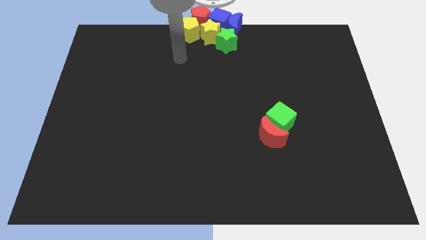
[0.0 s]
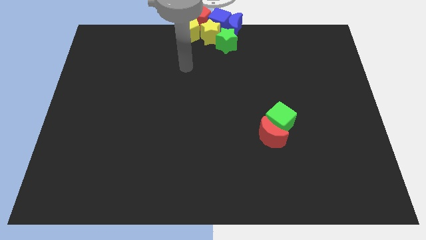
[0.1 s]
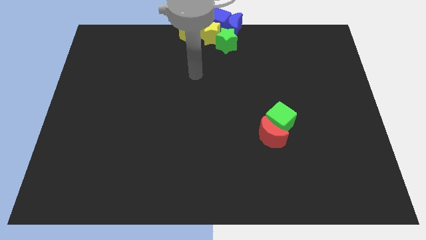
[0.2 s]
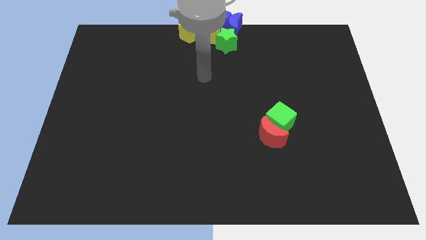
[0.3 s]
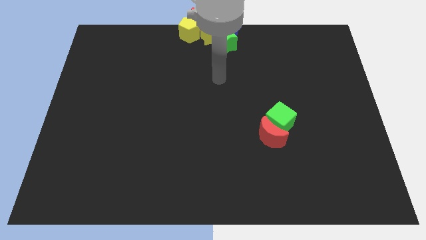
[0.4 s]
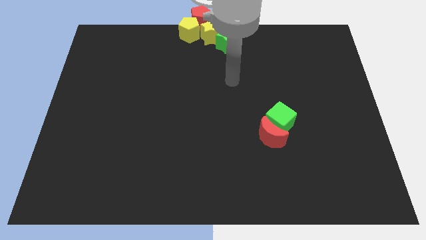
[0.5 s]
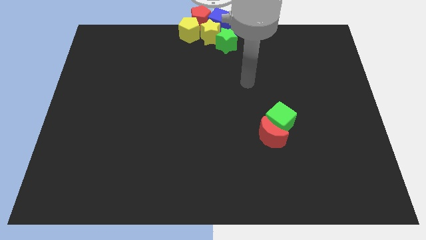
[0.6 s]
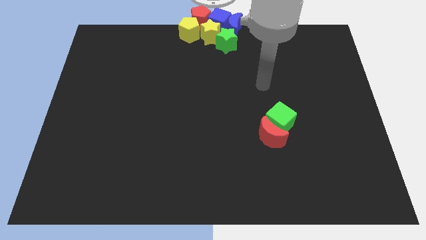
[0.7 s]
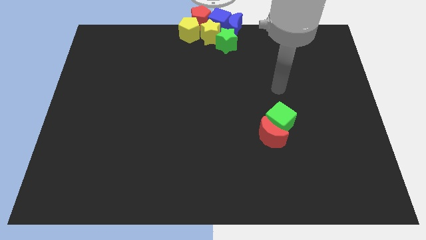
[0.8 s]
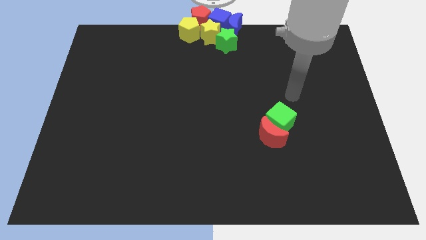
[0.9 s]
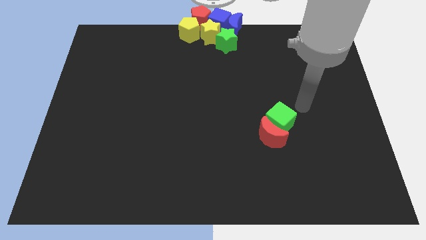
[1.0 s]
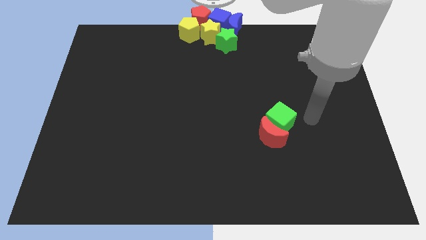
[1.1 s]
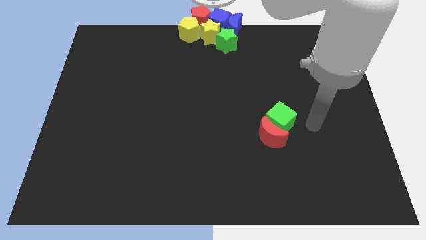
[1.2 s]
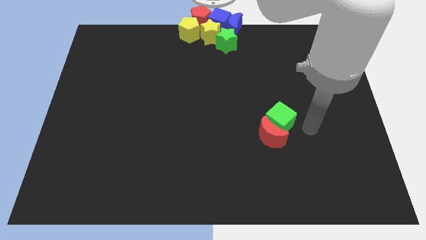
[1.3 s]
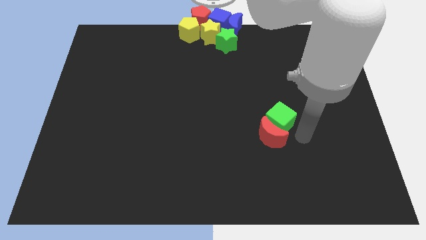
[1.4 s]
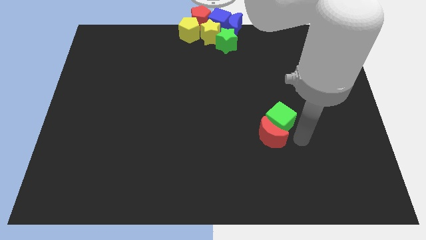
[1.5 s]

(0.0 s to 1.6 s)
point your arm at the right of the red crescent

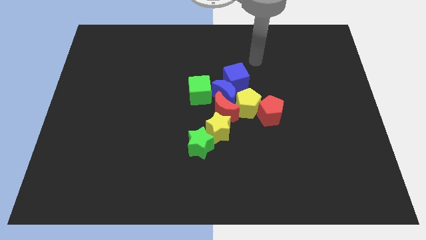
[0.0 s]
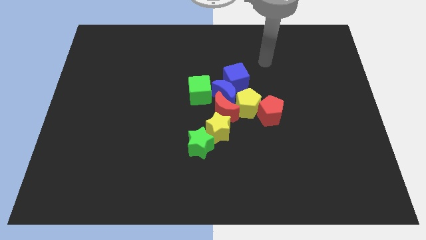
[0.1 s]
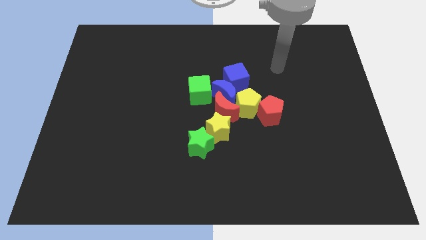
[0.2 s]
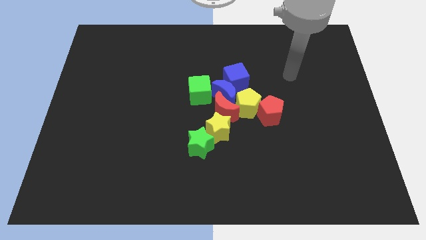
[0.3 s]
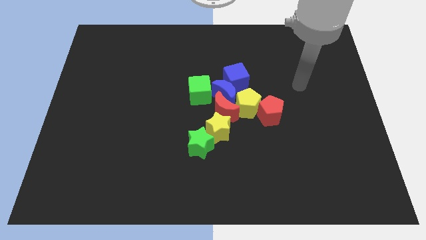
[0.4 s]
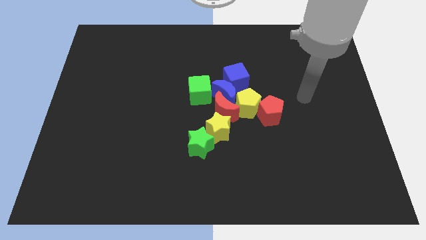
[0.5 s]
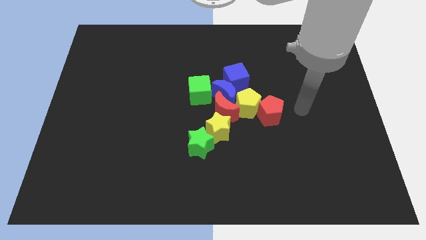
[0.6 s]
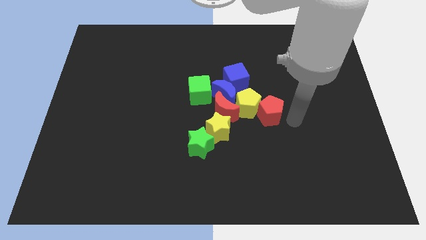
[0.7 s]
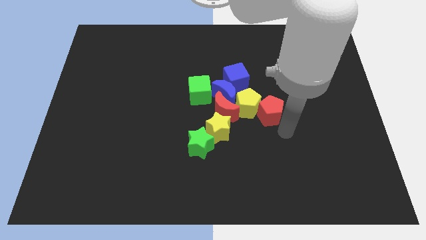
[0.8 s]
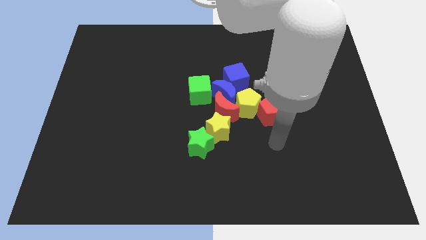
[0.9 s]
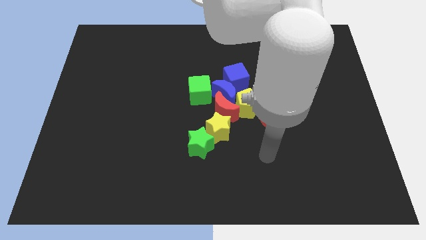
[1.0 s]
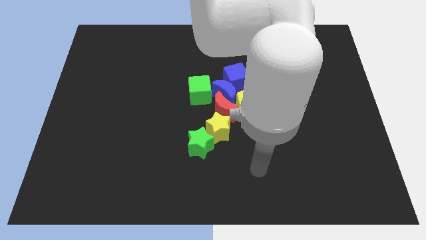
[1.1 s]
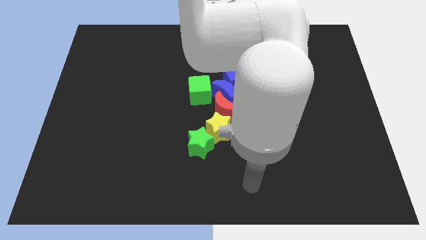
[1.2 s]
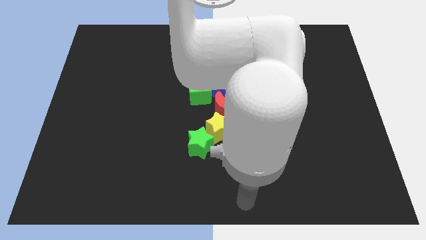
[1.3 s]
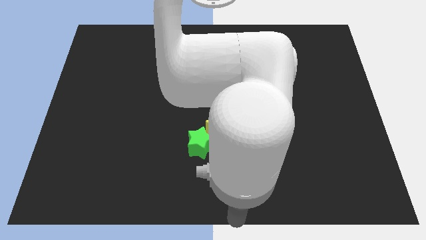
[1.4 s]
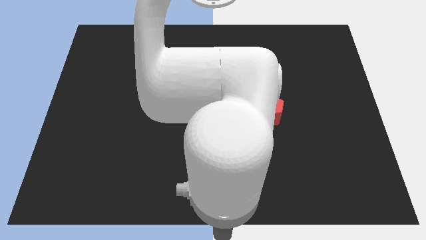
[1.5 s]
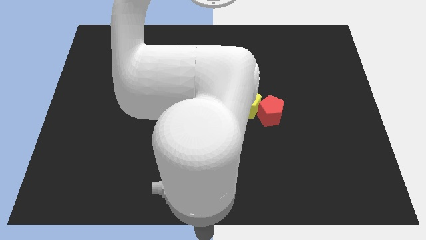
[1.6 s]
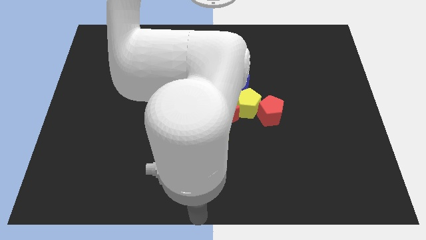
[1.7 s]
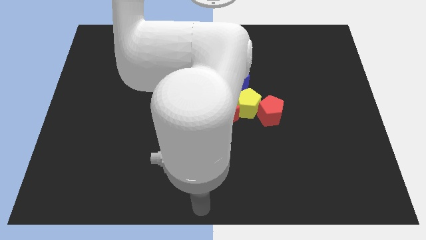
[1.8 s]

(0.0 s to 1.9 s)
place your arm at the bottom centre of the board

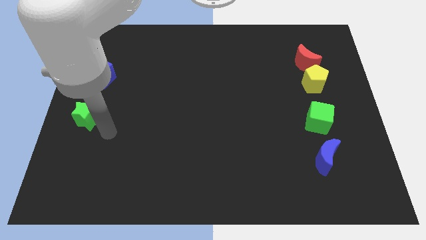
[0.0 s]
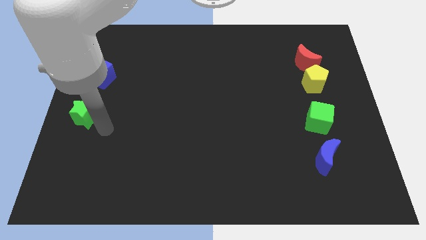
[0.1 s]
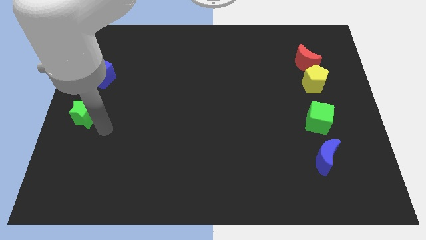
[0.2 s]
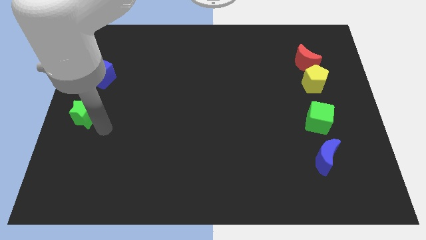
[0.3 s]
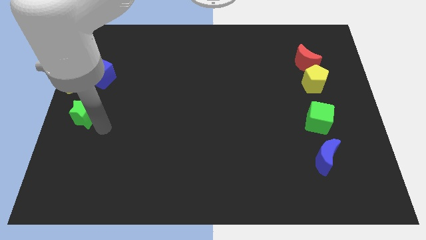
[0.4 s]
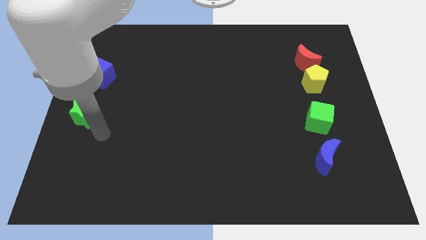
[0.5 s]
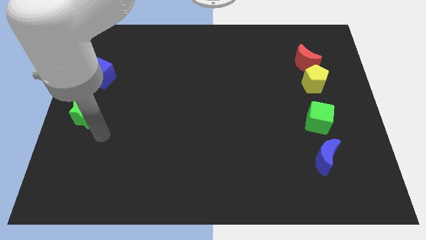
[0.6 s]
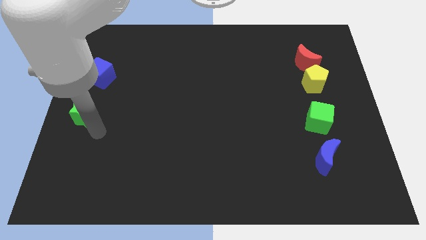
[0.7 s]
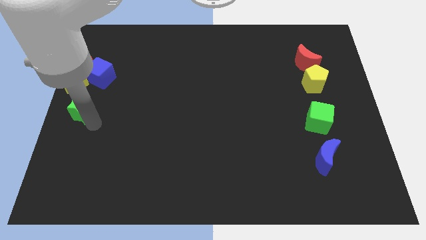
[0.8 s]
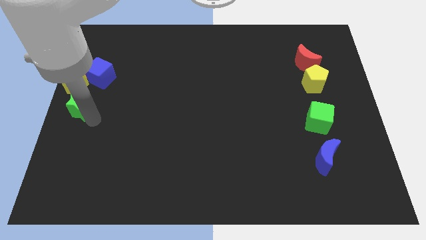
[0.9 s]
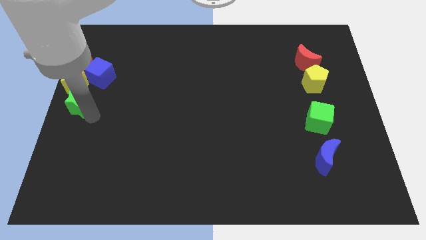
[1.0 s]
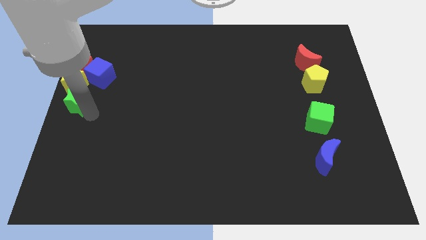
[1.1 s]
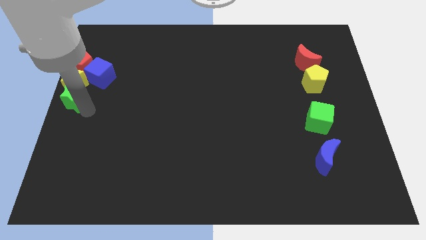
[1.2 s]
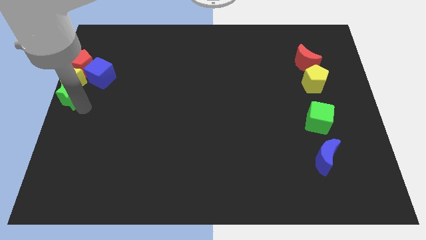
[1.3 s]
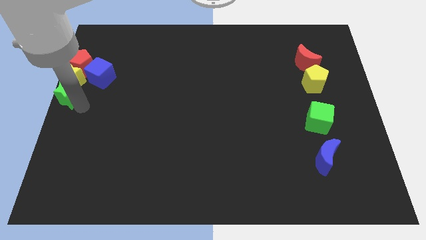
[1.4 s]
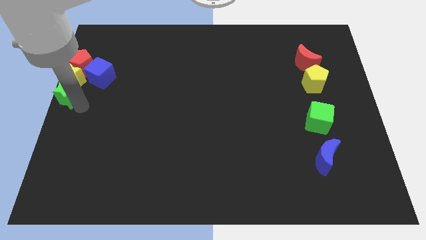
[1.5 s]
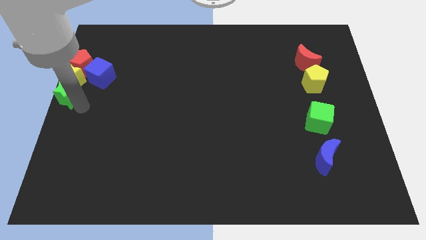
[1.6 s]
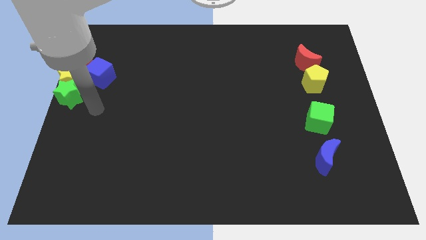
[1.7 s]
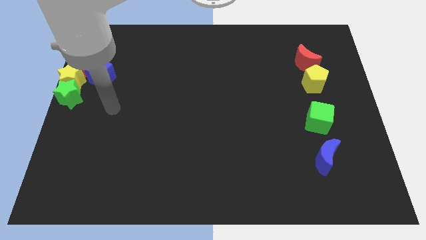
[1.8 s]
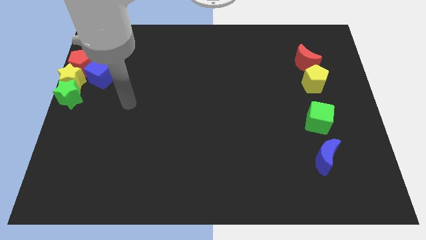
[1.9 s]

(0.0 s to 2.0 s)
move the green star below the yellow star

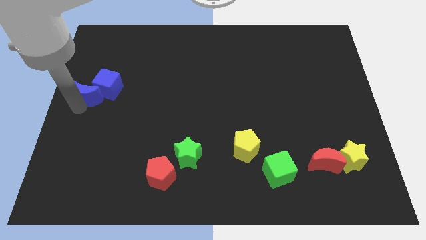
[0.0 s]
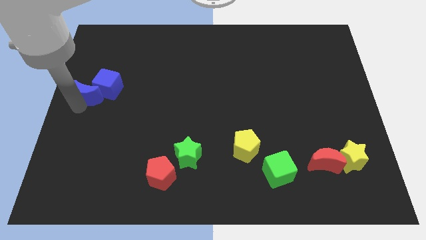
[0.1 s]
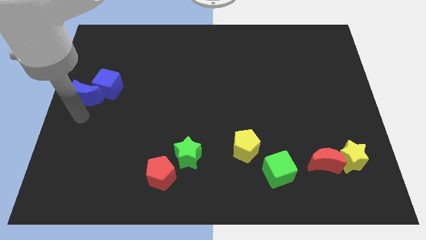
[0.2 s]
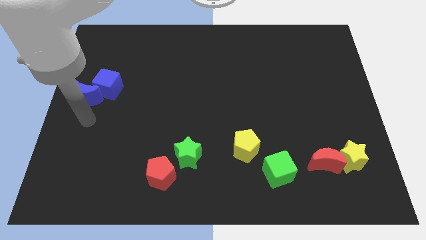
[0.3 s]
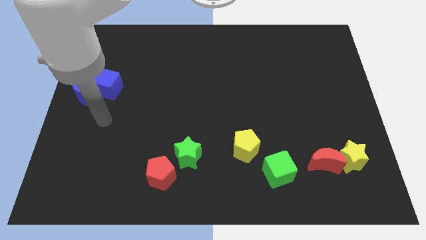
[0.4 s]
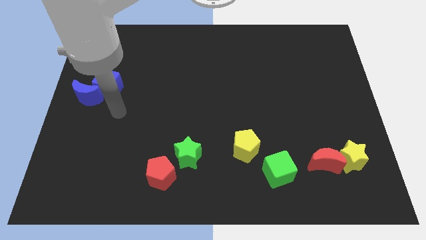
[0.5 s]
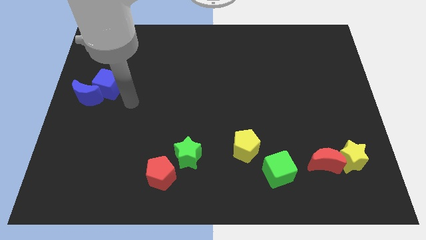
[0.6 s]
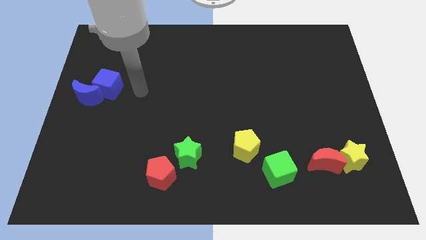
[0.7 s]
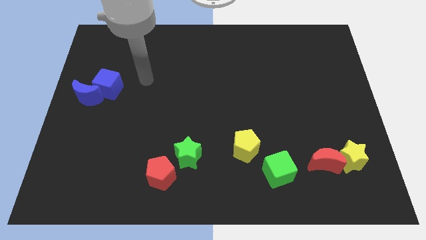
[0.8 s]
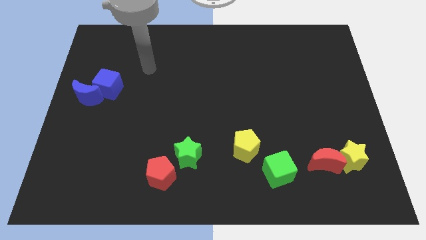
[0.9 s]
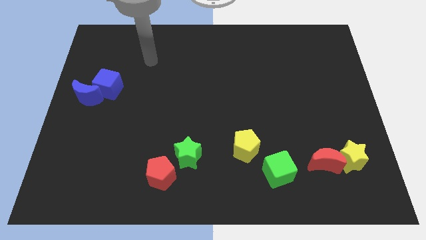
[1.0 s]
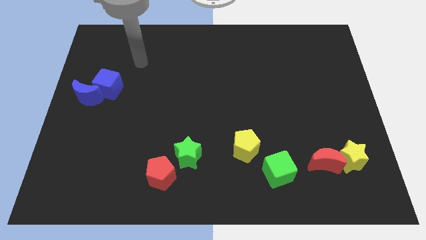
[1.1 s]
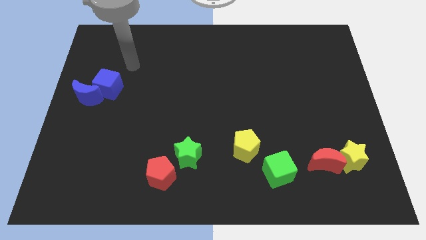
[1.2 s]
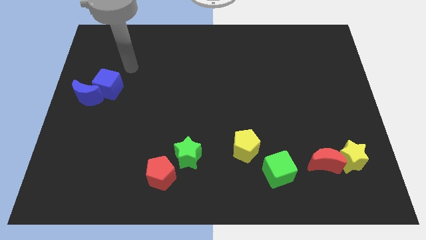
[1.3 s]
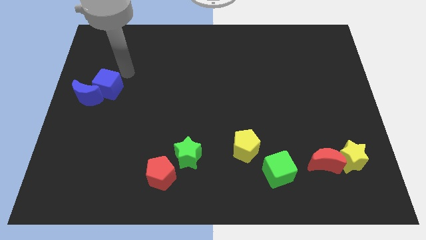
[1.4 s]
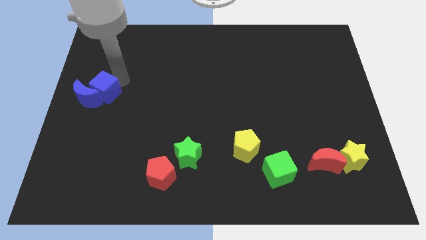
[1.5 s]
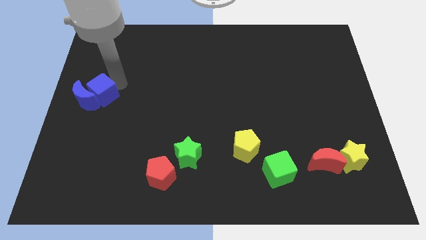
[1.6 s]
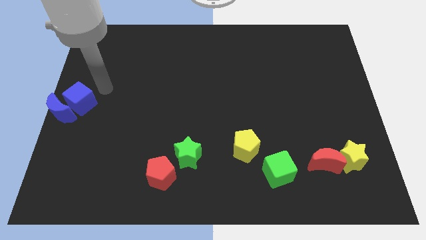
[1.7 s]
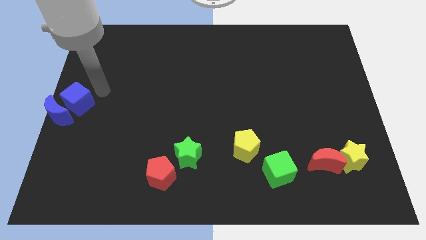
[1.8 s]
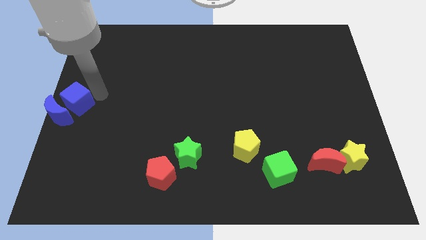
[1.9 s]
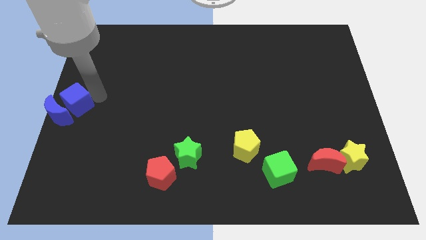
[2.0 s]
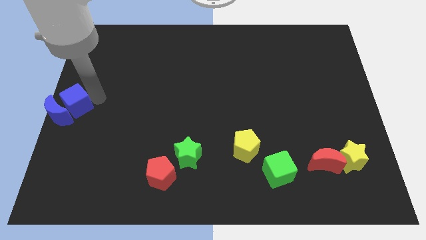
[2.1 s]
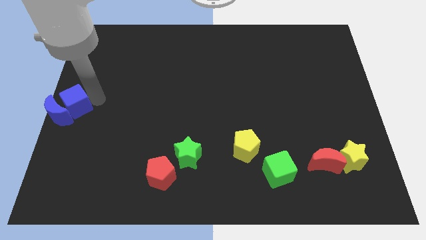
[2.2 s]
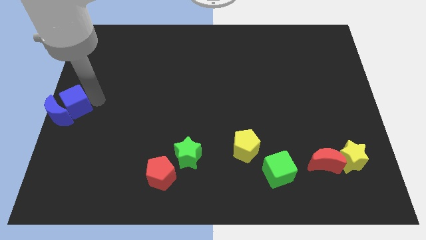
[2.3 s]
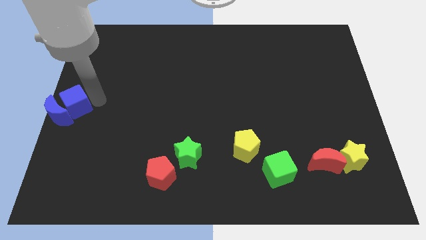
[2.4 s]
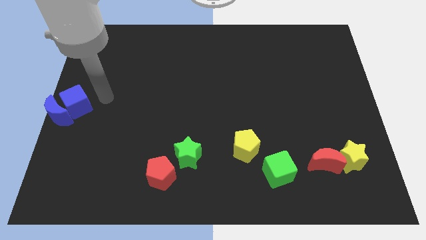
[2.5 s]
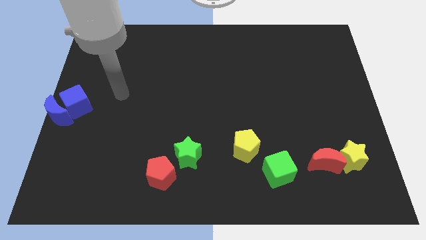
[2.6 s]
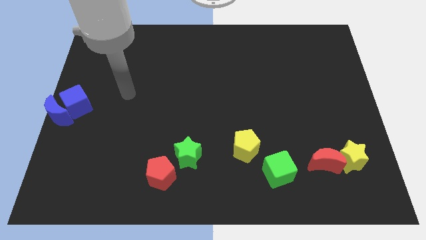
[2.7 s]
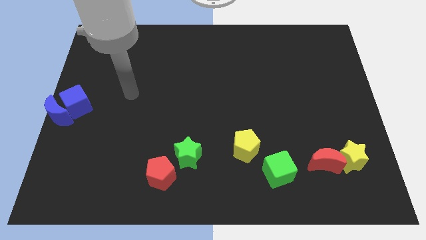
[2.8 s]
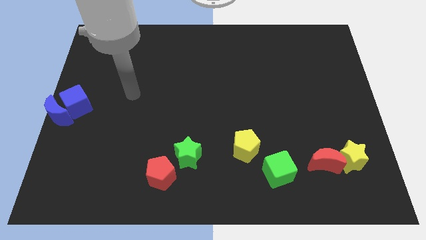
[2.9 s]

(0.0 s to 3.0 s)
push the blue moon and blue cube to the left side of the board

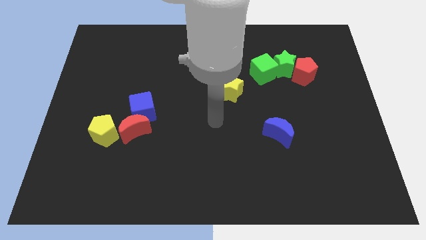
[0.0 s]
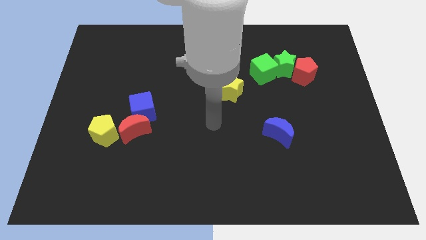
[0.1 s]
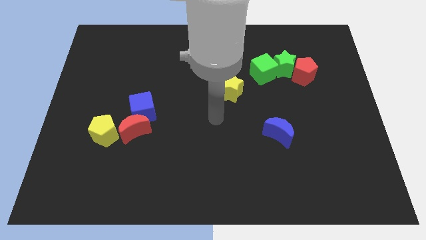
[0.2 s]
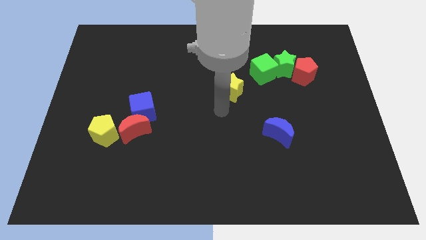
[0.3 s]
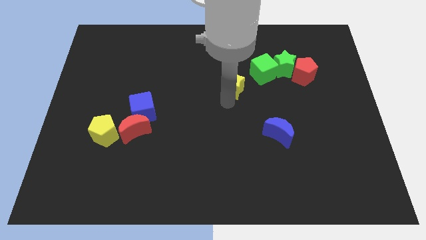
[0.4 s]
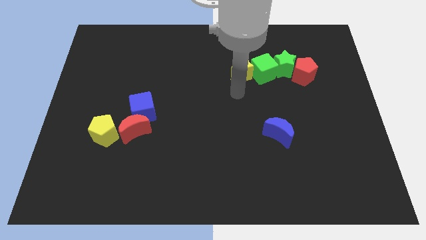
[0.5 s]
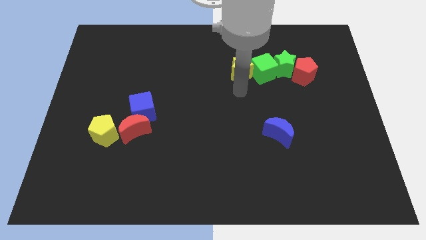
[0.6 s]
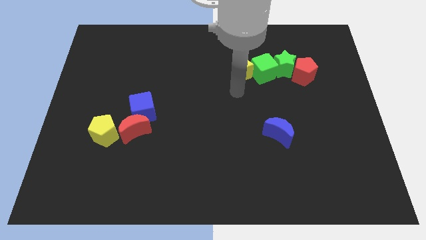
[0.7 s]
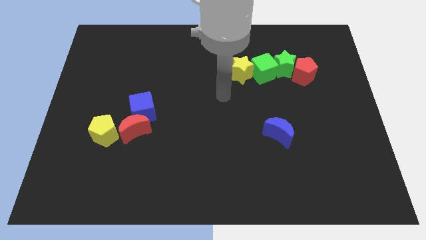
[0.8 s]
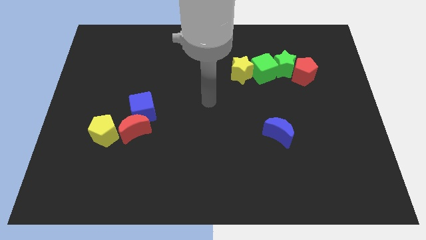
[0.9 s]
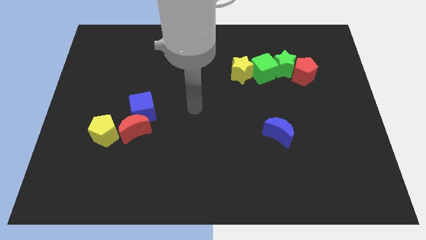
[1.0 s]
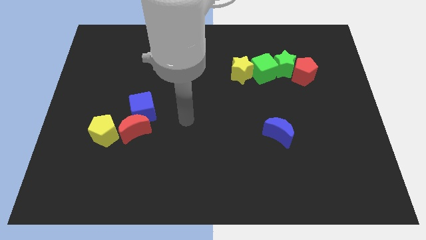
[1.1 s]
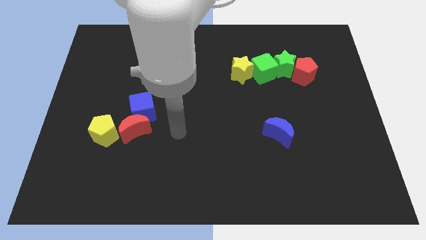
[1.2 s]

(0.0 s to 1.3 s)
place the yellow star to the left side of green cube
